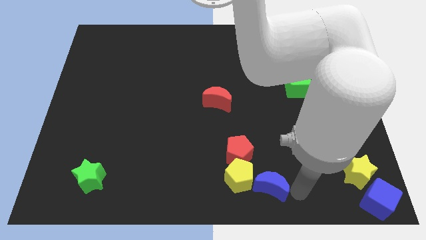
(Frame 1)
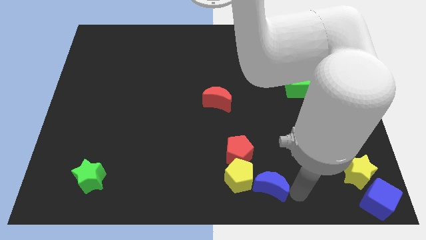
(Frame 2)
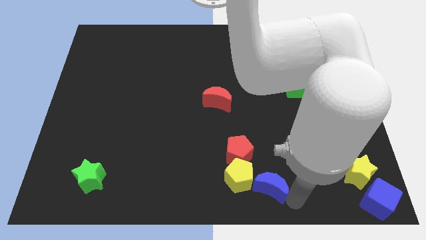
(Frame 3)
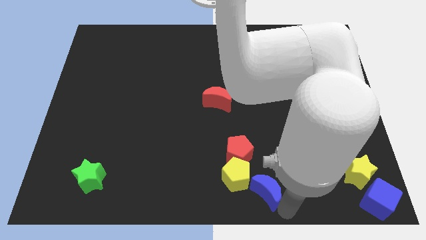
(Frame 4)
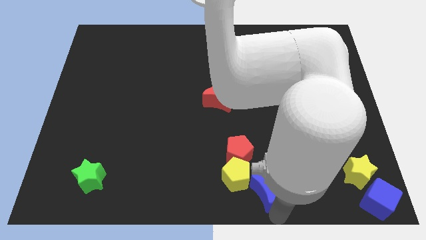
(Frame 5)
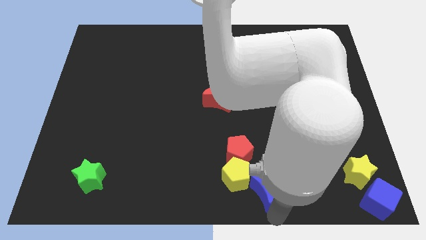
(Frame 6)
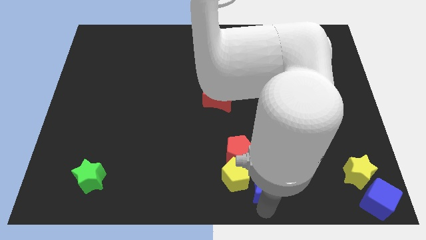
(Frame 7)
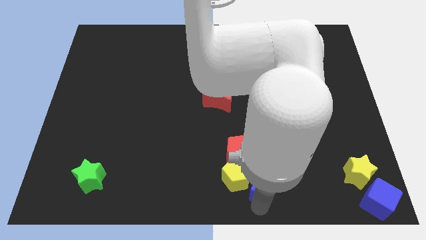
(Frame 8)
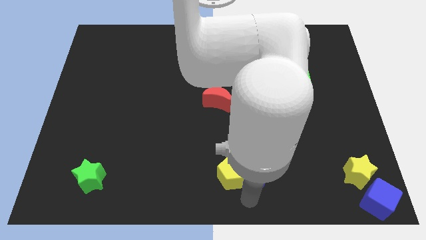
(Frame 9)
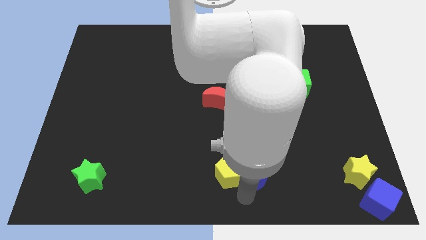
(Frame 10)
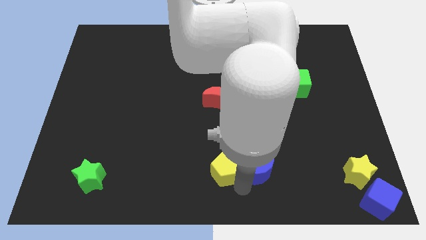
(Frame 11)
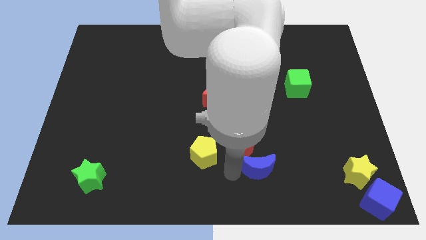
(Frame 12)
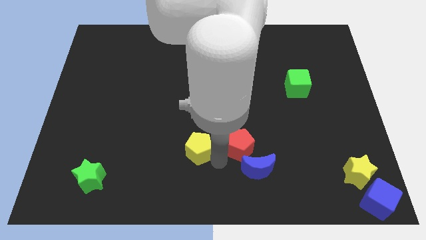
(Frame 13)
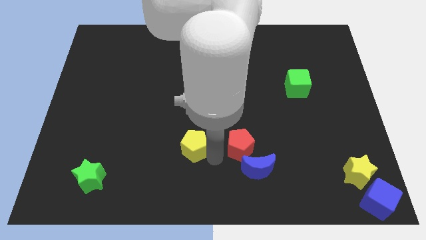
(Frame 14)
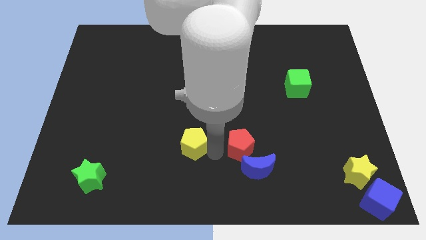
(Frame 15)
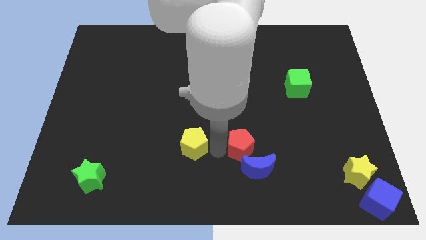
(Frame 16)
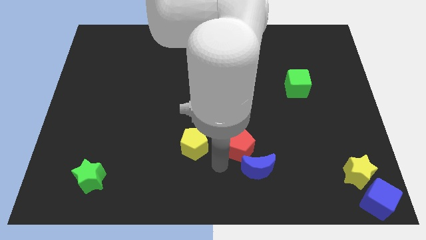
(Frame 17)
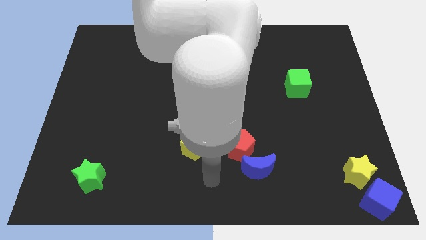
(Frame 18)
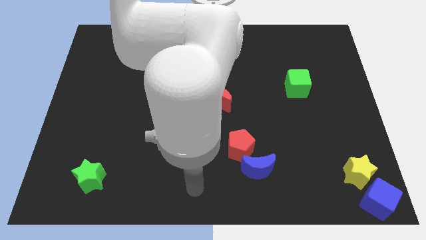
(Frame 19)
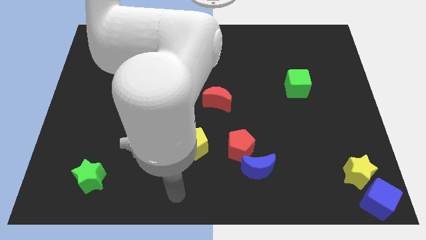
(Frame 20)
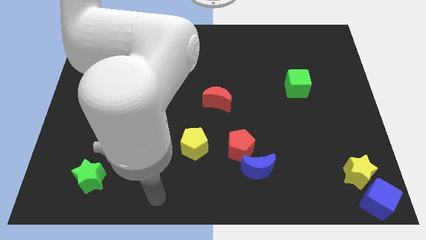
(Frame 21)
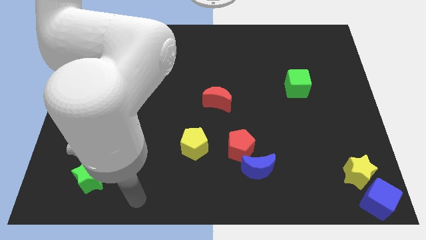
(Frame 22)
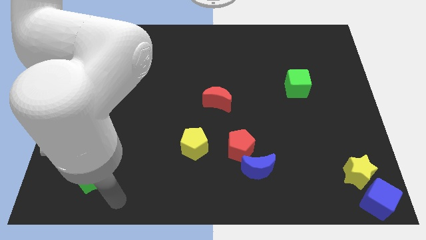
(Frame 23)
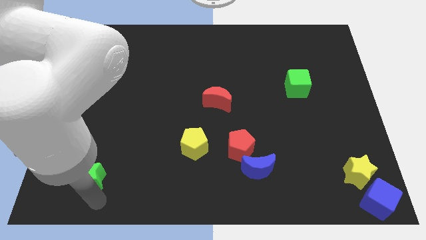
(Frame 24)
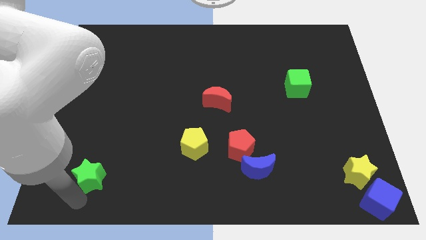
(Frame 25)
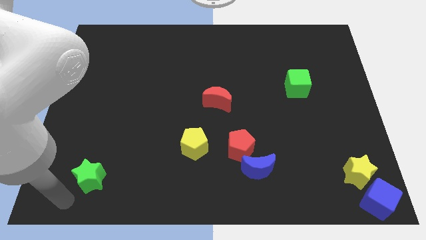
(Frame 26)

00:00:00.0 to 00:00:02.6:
separate the yellow pentagon from the group of blocks

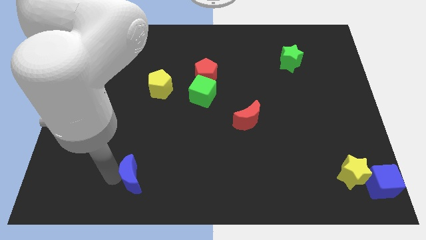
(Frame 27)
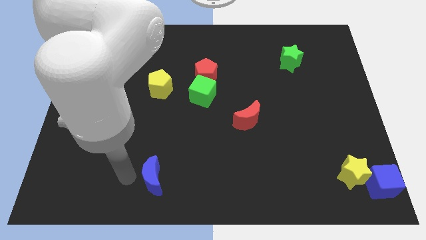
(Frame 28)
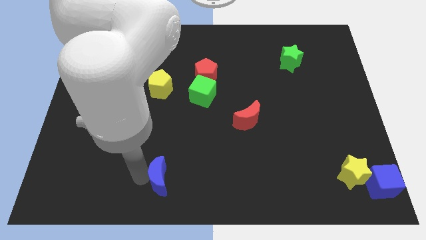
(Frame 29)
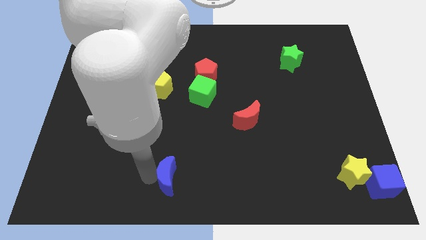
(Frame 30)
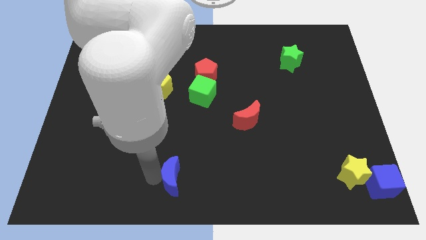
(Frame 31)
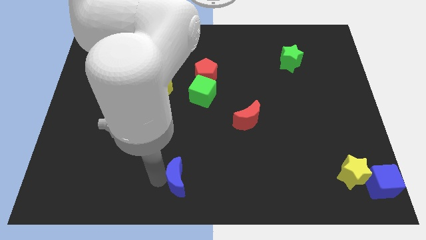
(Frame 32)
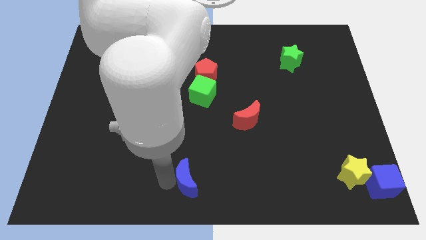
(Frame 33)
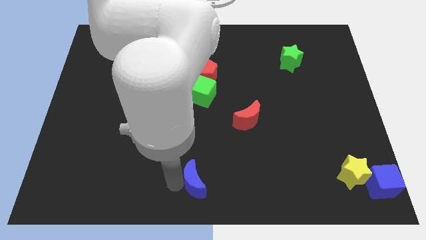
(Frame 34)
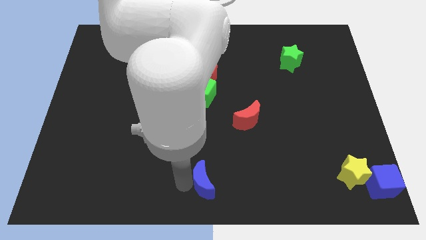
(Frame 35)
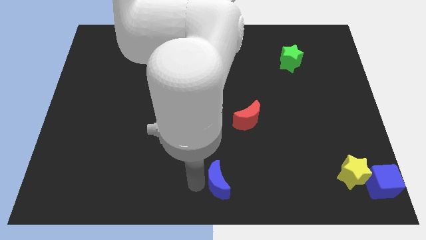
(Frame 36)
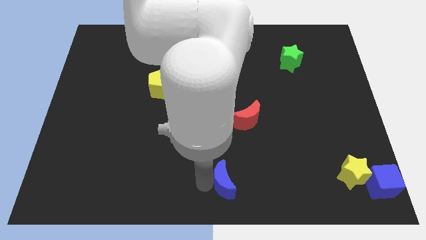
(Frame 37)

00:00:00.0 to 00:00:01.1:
drag the blue moon to the bottom center

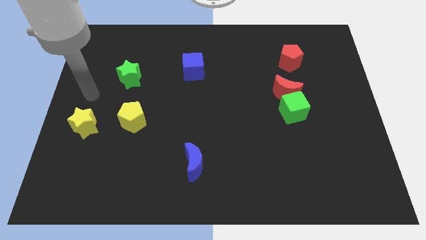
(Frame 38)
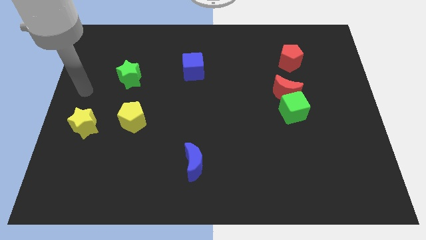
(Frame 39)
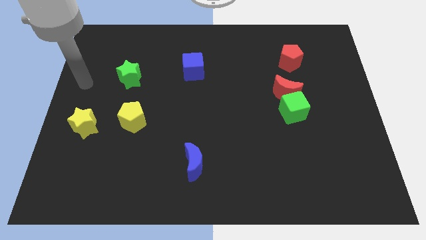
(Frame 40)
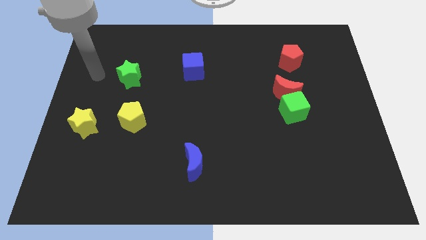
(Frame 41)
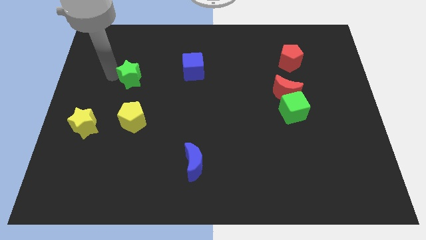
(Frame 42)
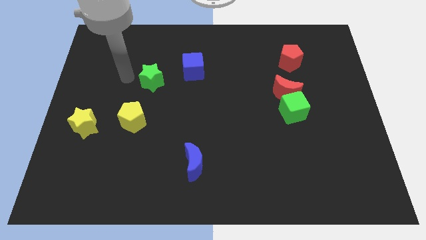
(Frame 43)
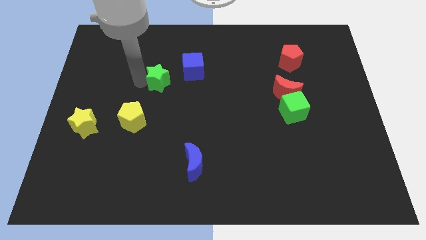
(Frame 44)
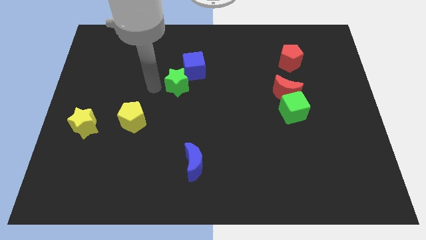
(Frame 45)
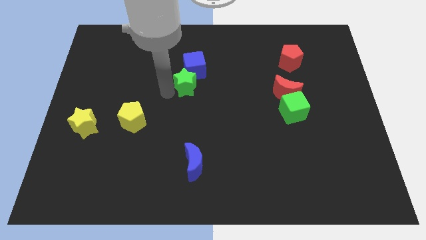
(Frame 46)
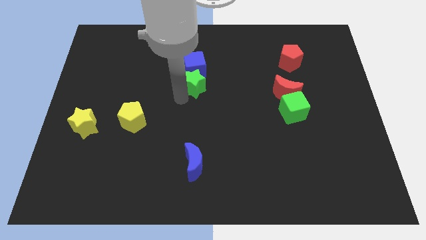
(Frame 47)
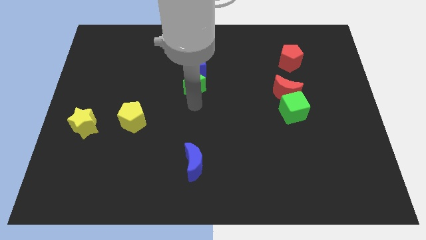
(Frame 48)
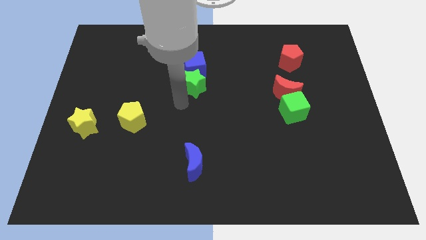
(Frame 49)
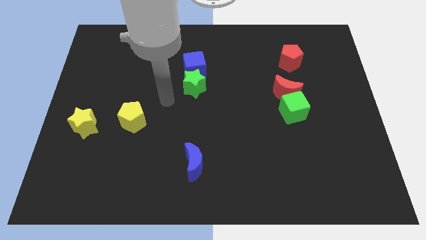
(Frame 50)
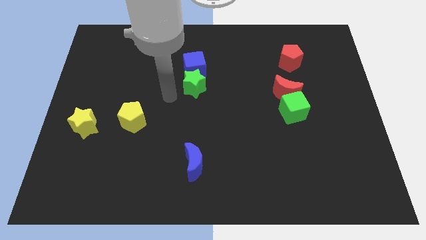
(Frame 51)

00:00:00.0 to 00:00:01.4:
place the green star below the blue cube

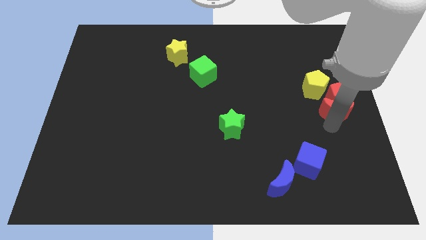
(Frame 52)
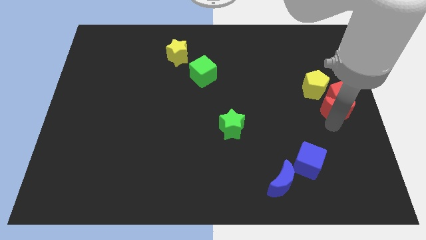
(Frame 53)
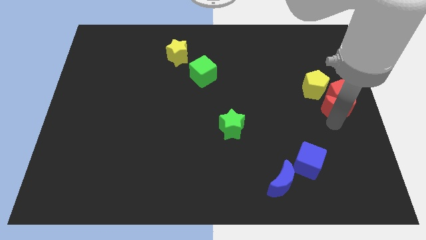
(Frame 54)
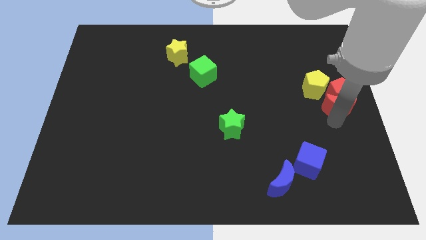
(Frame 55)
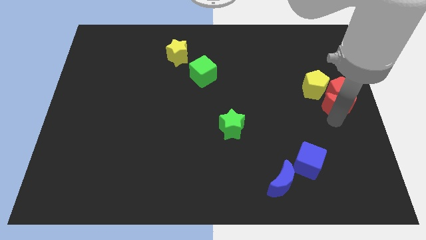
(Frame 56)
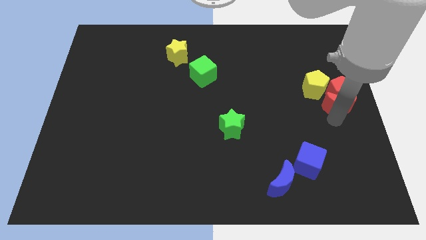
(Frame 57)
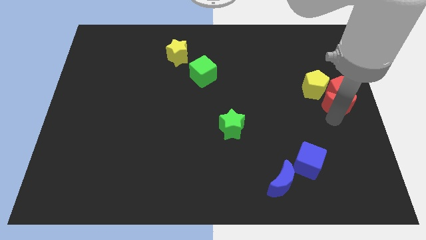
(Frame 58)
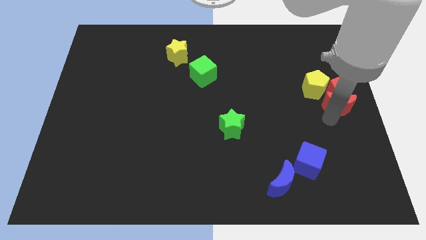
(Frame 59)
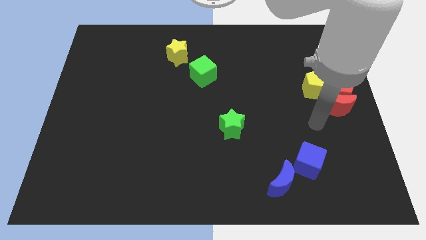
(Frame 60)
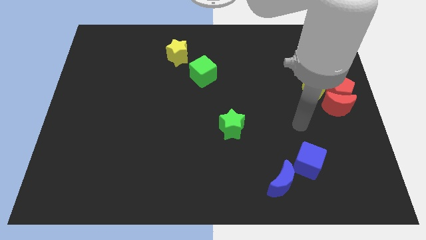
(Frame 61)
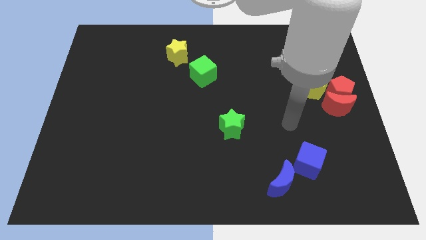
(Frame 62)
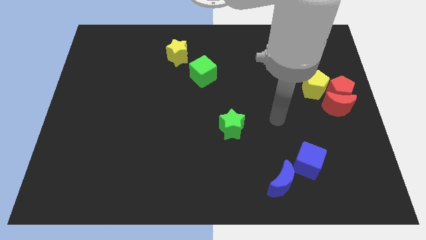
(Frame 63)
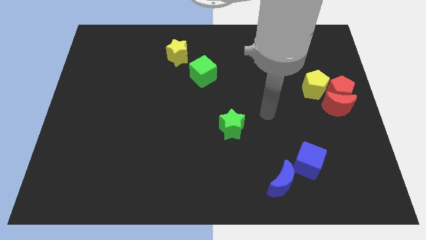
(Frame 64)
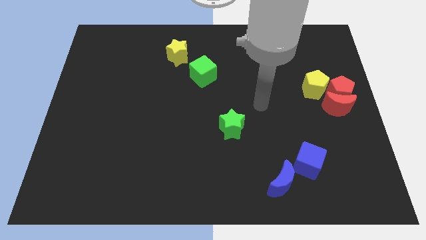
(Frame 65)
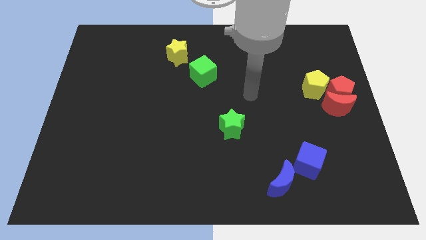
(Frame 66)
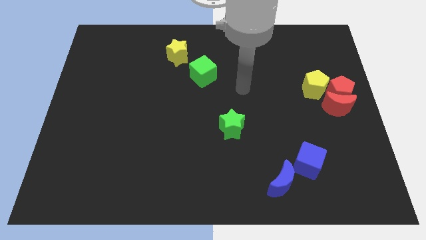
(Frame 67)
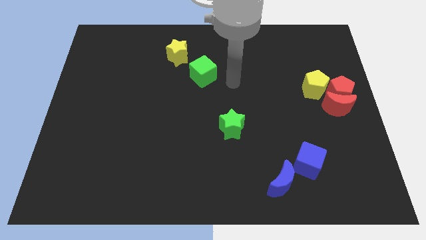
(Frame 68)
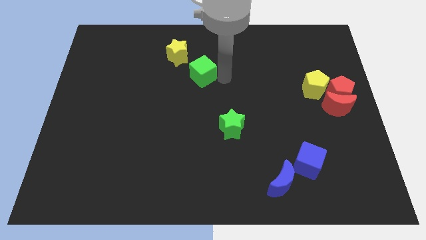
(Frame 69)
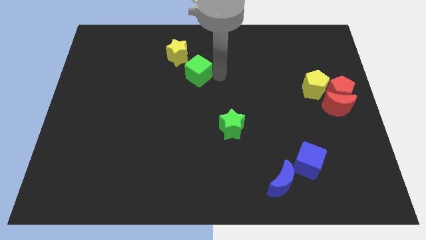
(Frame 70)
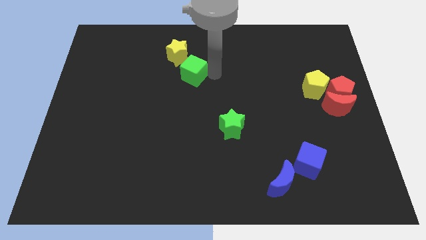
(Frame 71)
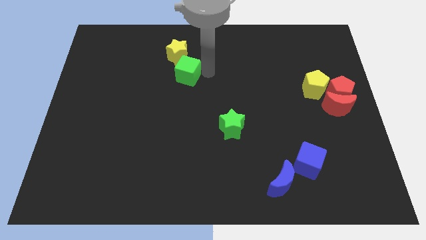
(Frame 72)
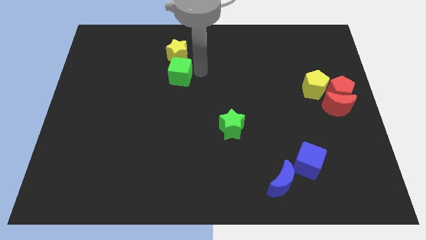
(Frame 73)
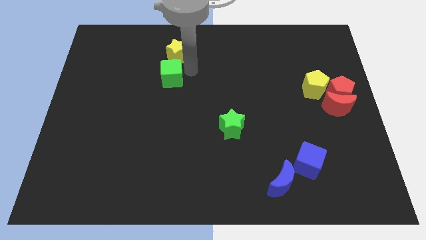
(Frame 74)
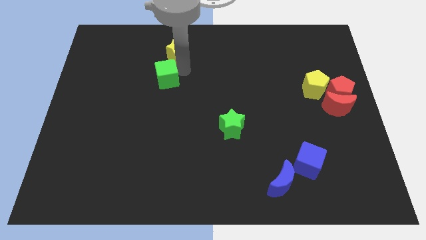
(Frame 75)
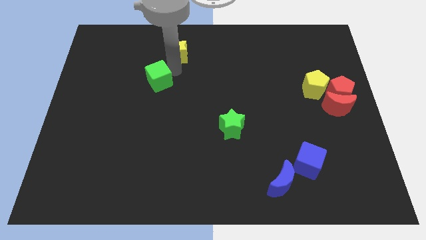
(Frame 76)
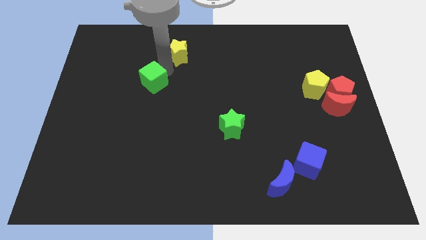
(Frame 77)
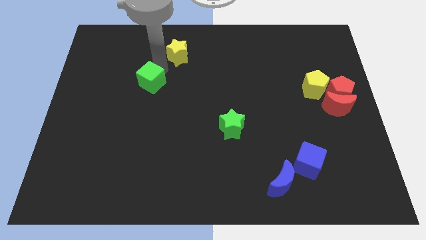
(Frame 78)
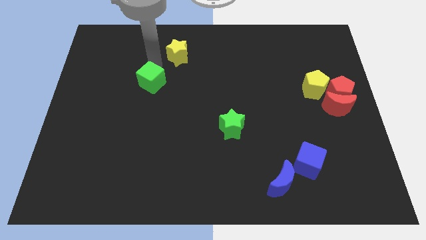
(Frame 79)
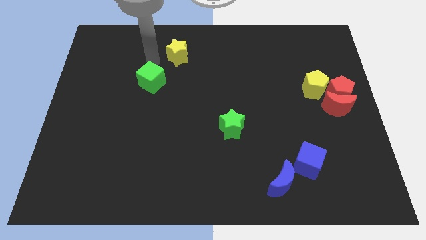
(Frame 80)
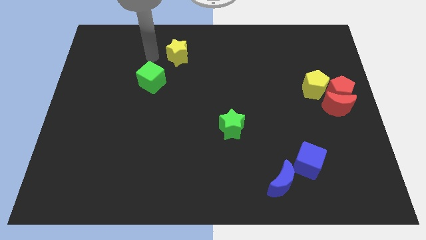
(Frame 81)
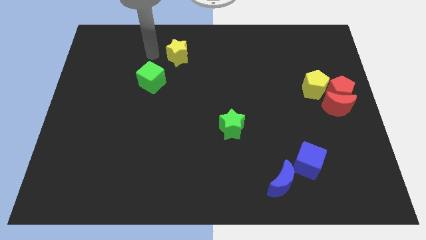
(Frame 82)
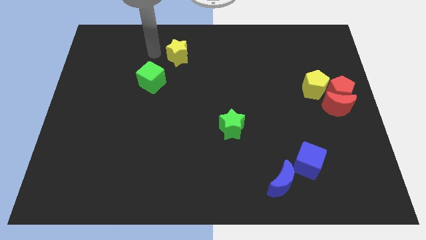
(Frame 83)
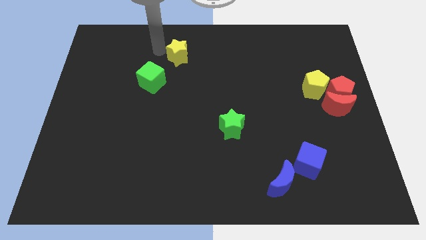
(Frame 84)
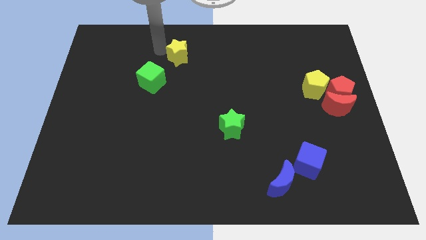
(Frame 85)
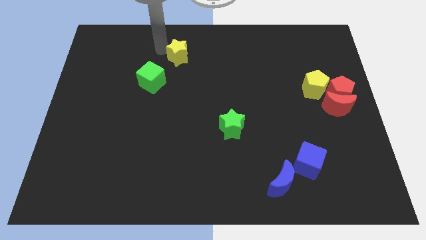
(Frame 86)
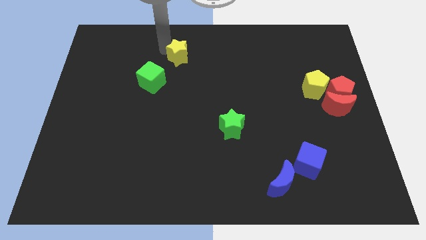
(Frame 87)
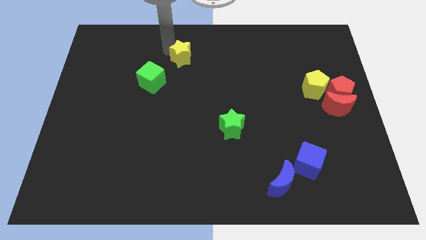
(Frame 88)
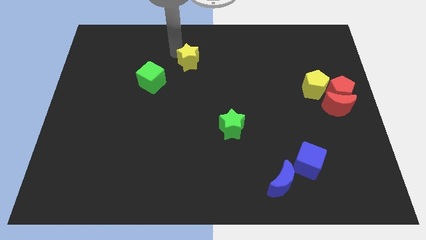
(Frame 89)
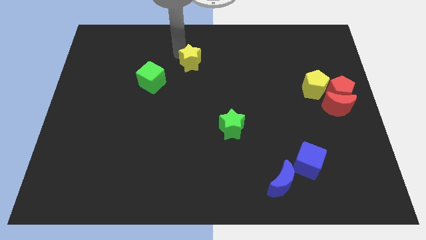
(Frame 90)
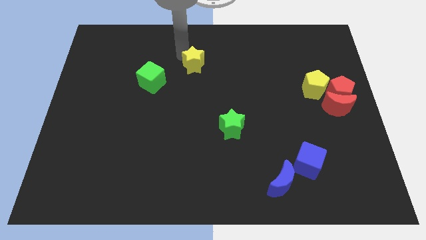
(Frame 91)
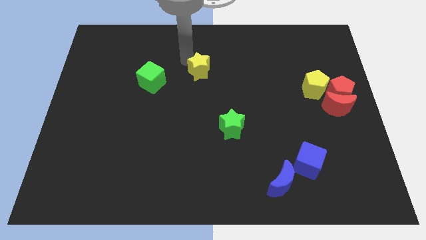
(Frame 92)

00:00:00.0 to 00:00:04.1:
move the green cube towards the left side of the board
